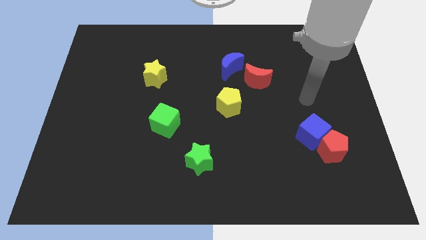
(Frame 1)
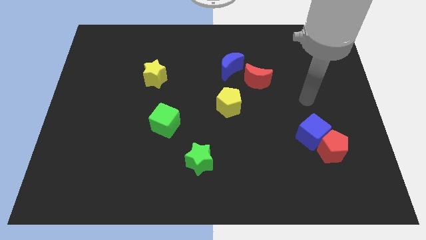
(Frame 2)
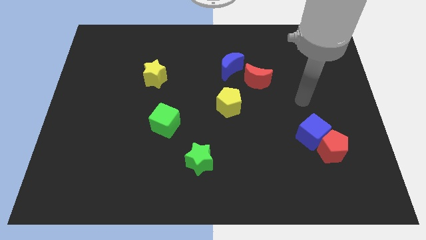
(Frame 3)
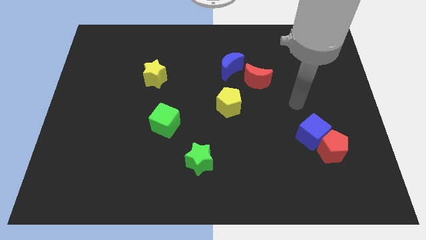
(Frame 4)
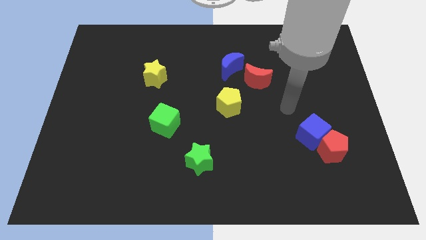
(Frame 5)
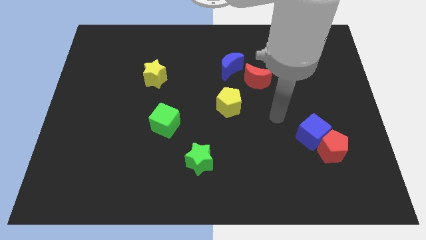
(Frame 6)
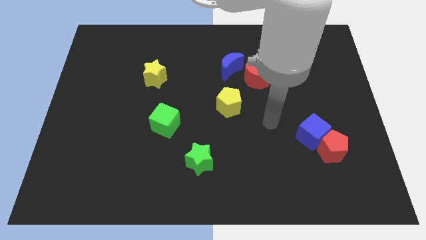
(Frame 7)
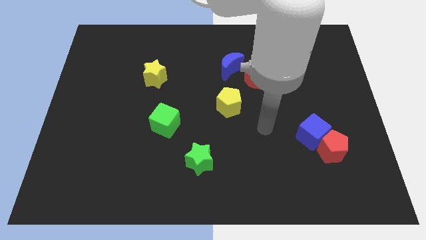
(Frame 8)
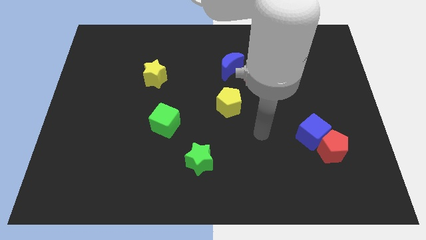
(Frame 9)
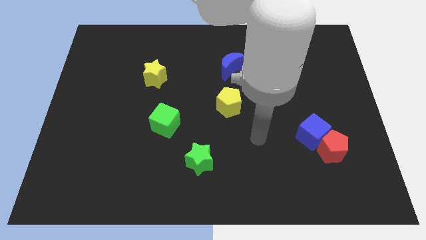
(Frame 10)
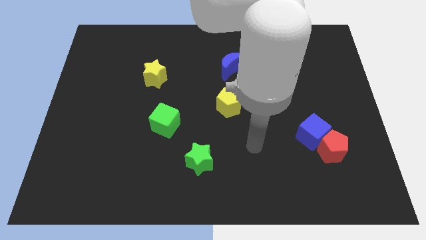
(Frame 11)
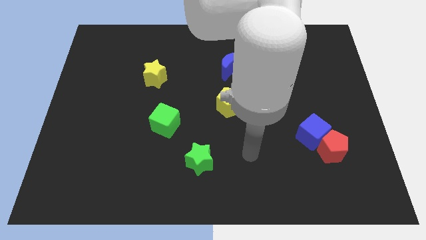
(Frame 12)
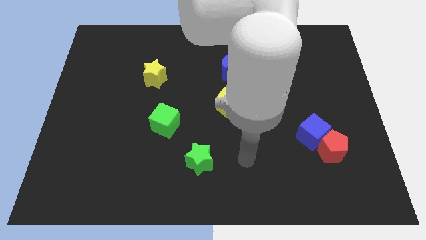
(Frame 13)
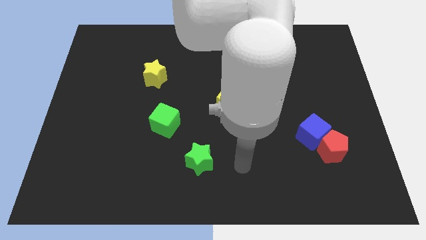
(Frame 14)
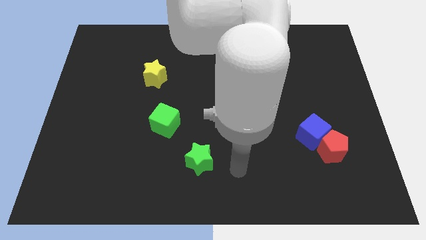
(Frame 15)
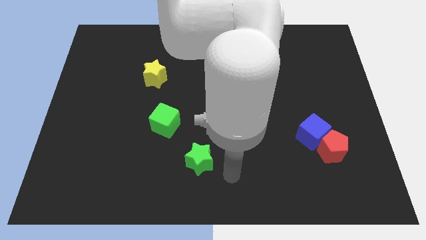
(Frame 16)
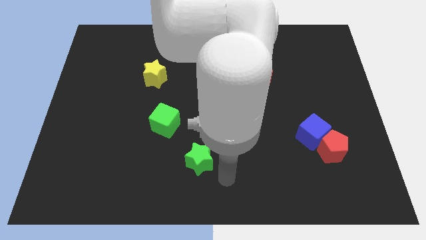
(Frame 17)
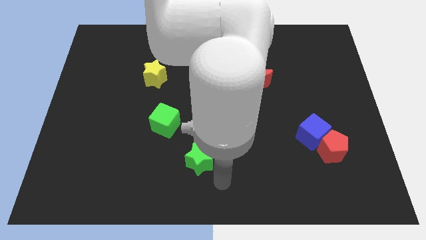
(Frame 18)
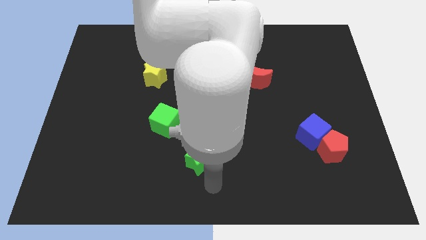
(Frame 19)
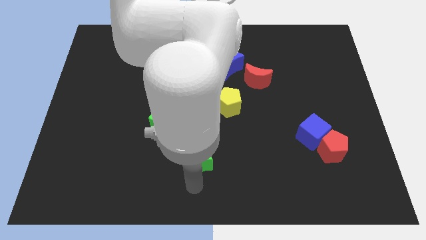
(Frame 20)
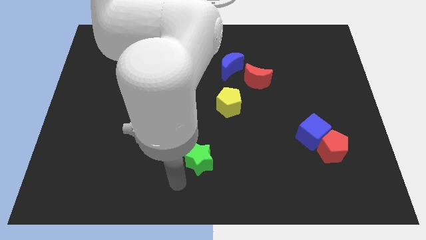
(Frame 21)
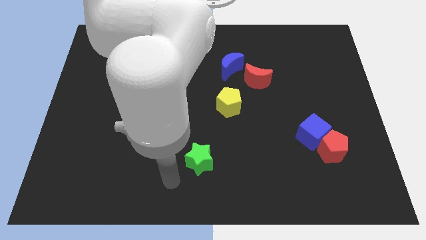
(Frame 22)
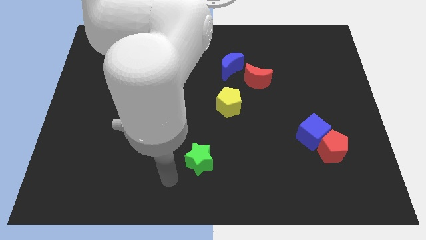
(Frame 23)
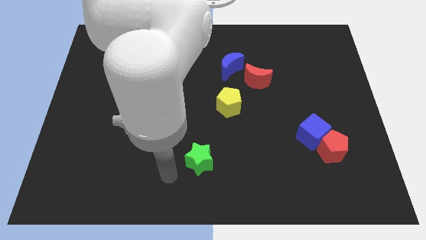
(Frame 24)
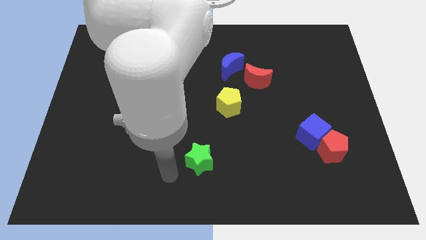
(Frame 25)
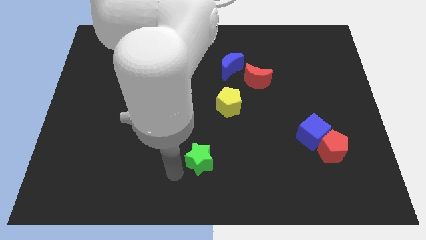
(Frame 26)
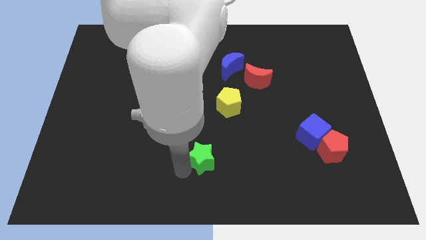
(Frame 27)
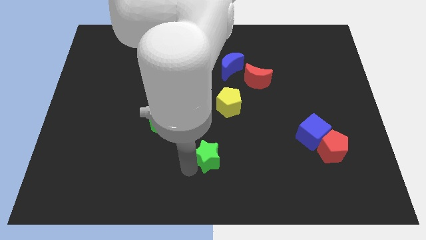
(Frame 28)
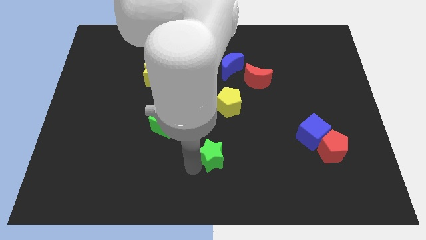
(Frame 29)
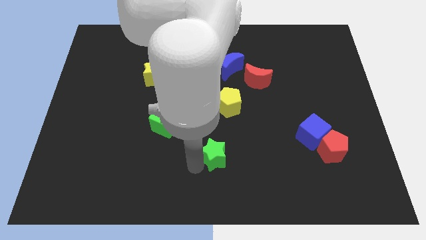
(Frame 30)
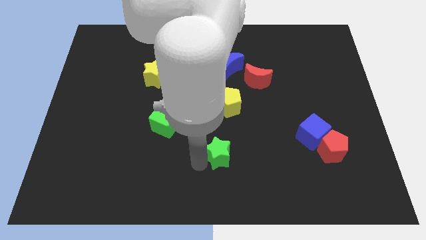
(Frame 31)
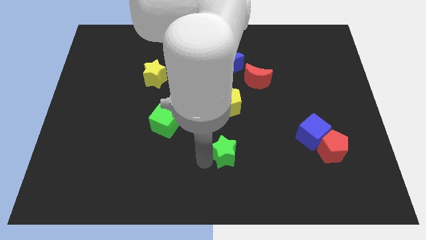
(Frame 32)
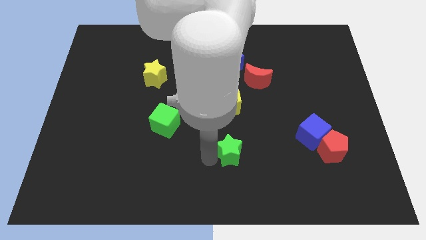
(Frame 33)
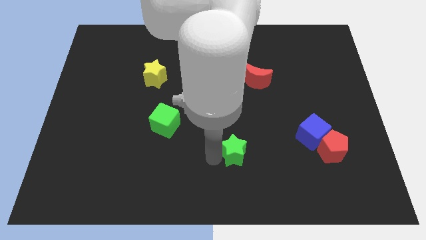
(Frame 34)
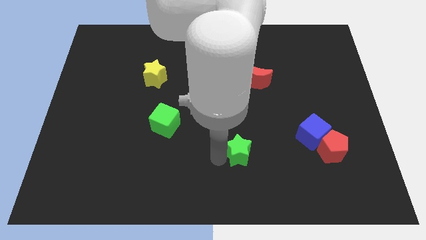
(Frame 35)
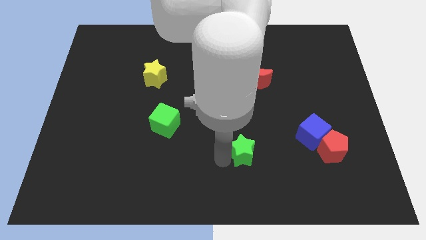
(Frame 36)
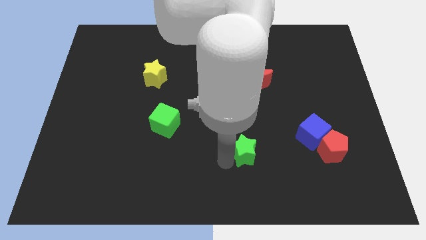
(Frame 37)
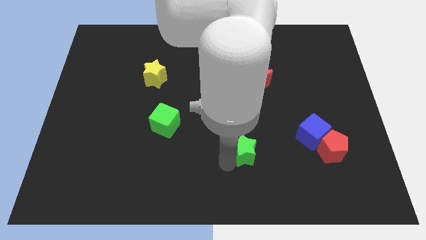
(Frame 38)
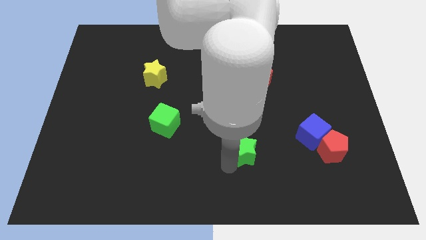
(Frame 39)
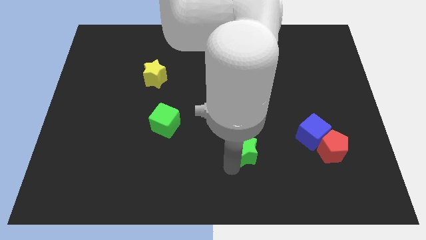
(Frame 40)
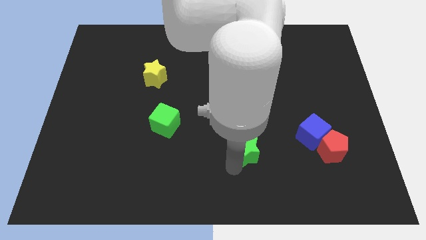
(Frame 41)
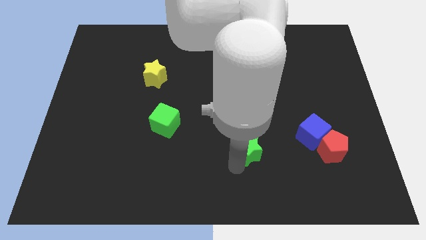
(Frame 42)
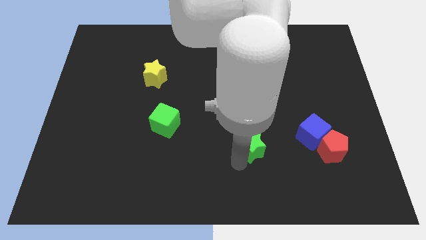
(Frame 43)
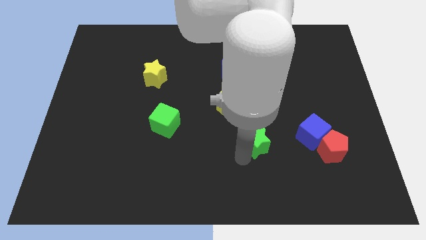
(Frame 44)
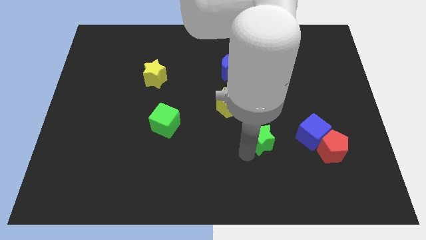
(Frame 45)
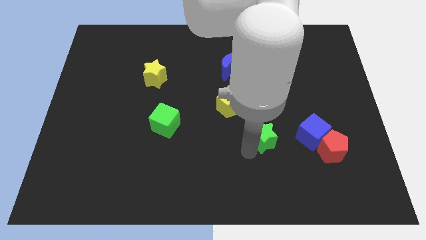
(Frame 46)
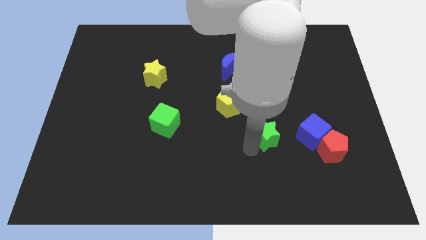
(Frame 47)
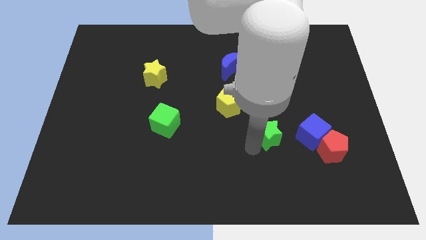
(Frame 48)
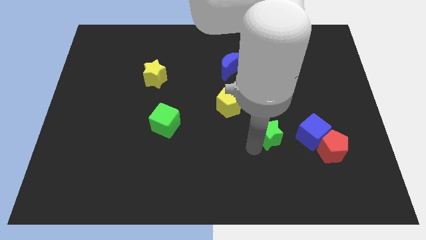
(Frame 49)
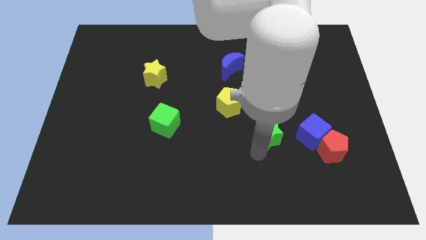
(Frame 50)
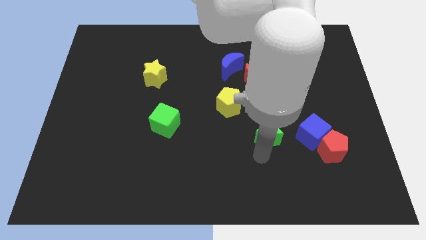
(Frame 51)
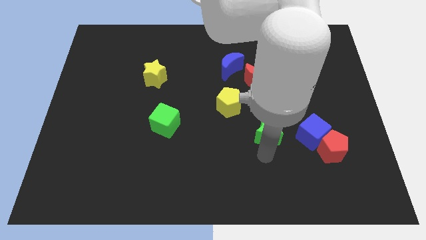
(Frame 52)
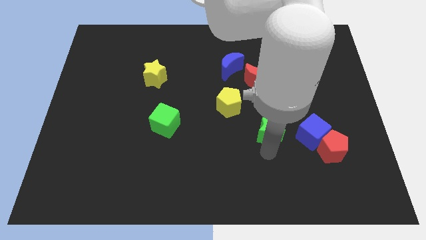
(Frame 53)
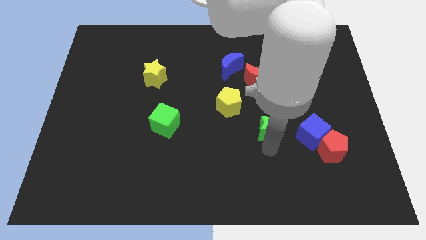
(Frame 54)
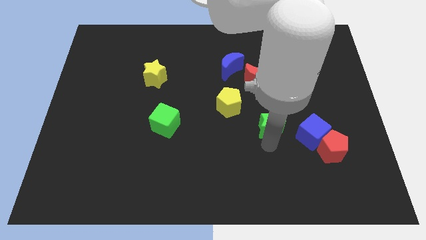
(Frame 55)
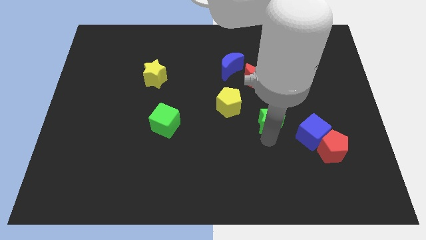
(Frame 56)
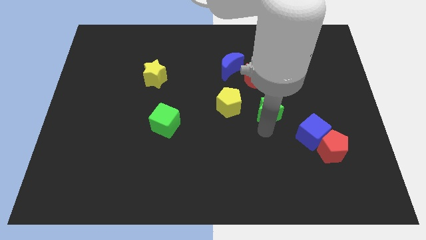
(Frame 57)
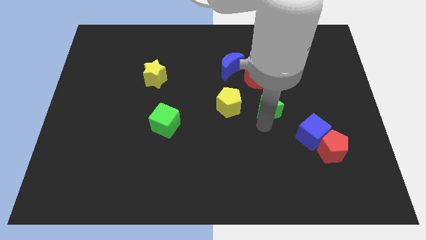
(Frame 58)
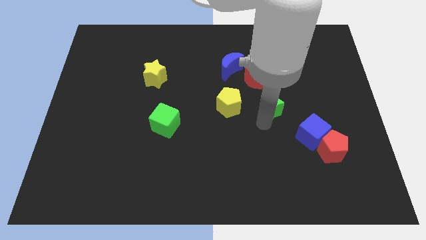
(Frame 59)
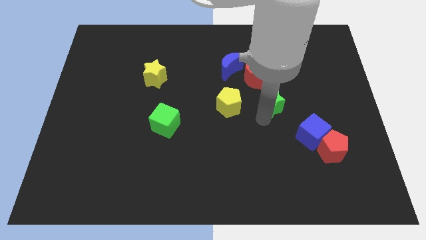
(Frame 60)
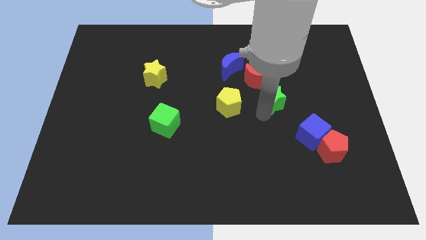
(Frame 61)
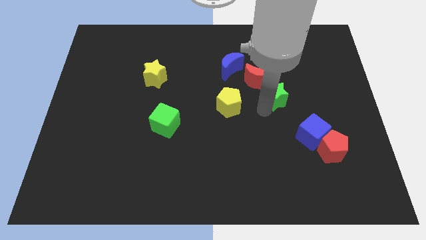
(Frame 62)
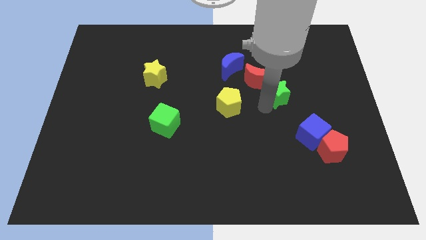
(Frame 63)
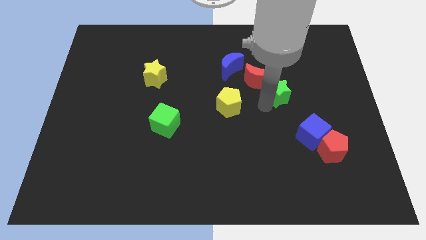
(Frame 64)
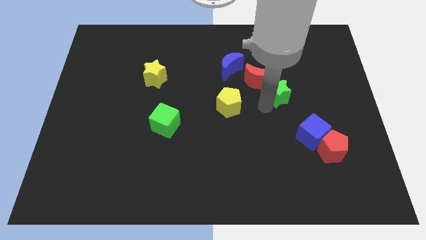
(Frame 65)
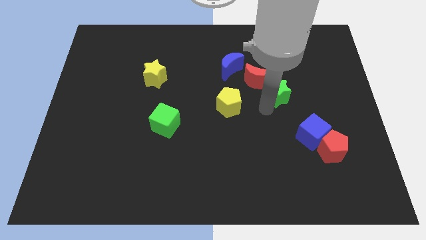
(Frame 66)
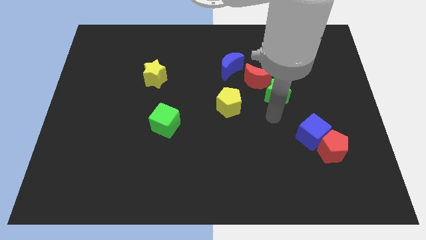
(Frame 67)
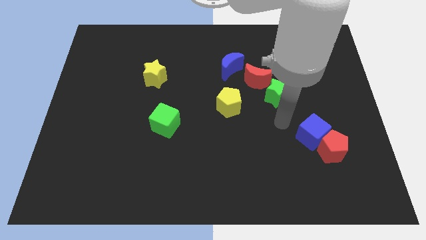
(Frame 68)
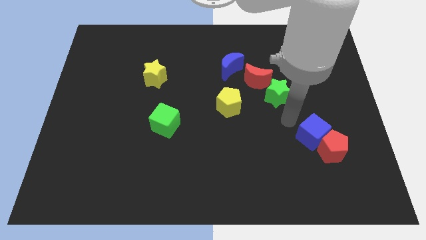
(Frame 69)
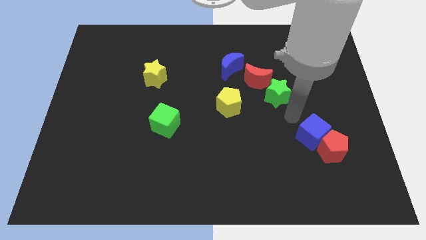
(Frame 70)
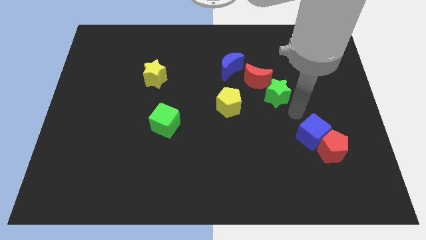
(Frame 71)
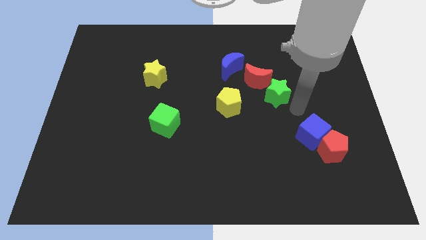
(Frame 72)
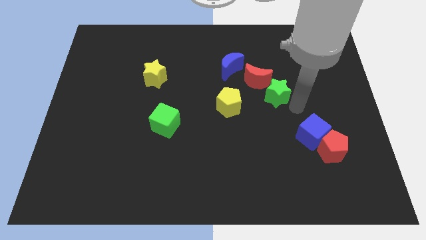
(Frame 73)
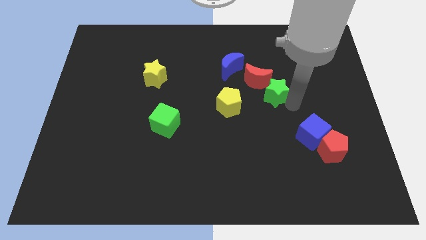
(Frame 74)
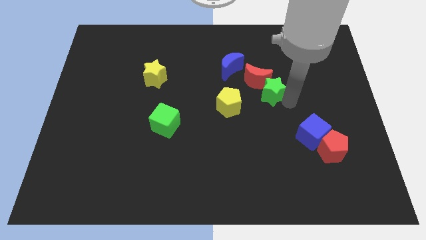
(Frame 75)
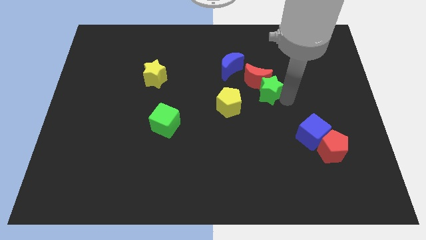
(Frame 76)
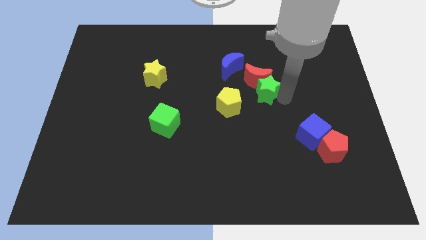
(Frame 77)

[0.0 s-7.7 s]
move the green star next to the red moon

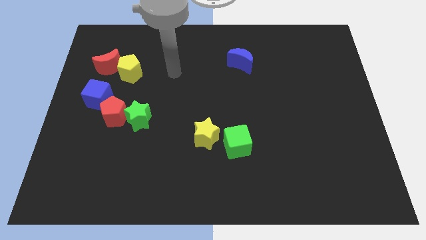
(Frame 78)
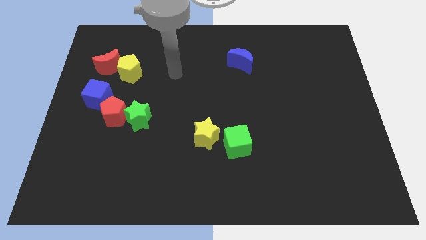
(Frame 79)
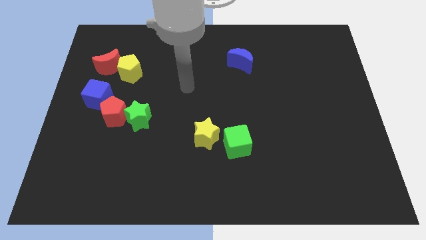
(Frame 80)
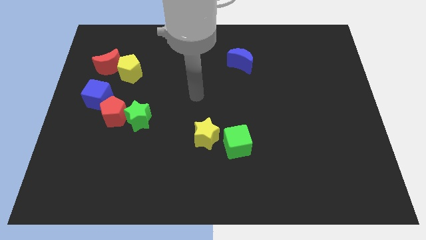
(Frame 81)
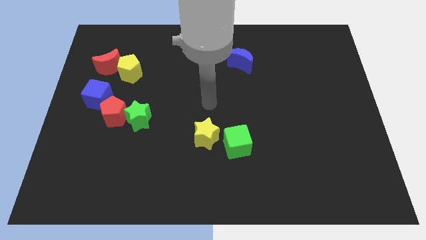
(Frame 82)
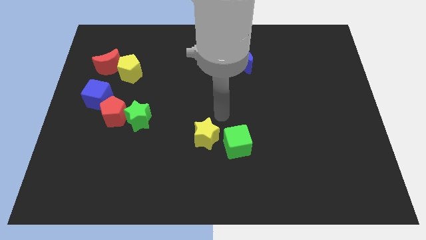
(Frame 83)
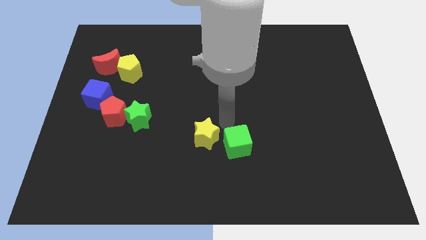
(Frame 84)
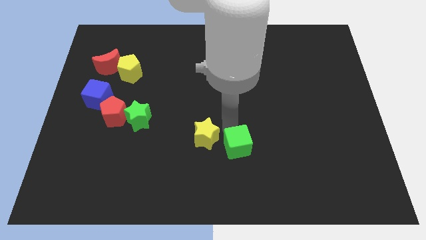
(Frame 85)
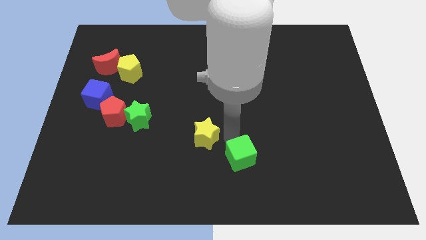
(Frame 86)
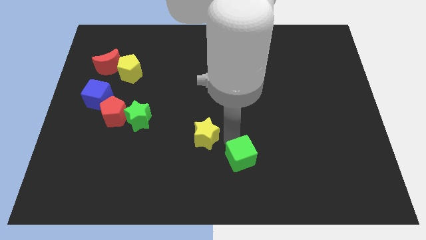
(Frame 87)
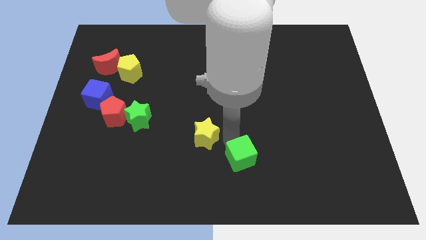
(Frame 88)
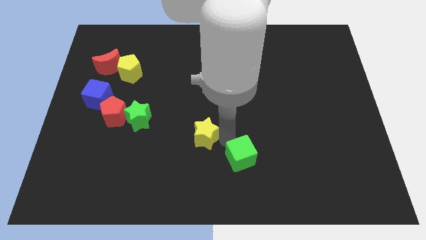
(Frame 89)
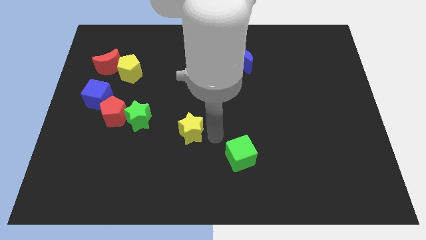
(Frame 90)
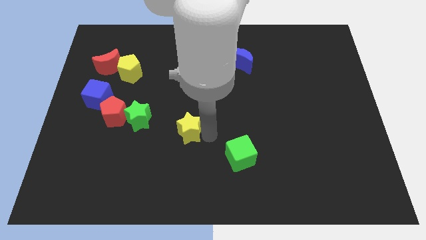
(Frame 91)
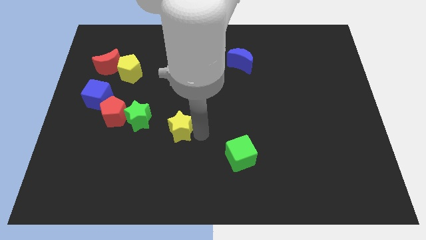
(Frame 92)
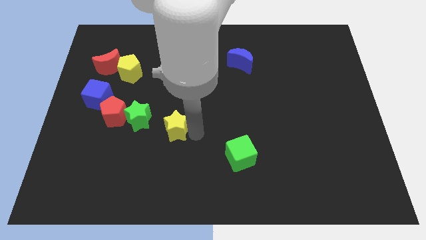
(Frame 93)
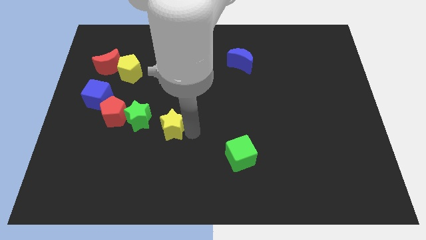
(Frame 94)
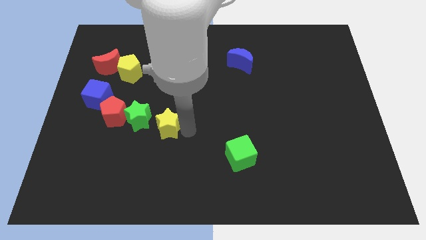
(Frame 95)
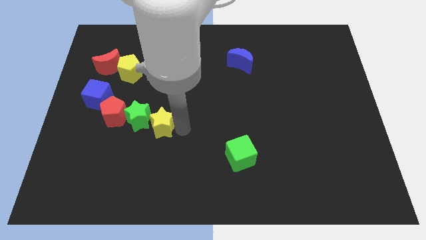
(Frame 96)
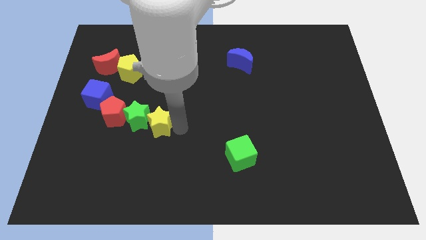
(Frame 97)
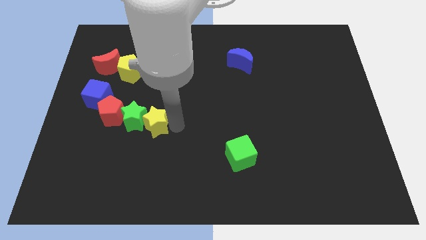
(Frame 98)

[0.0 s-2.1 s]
move the yellow star to the green star
